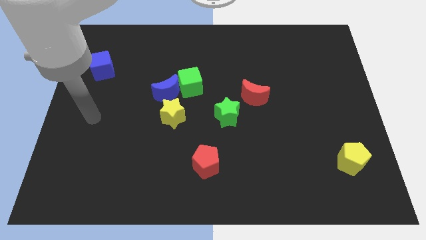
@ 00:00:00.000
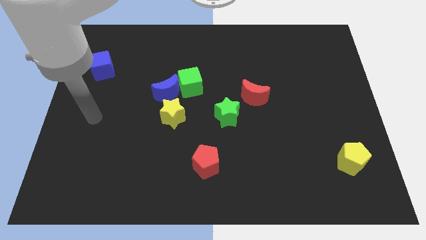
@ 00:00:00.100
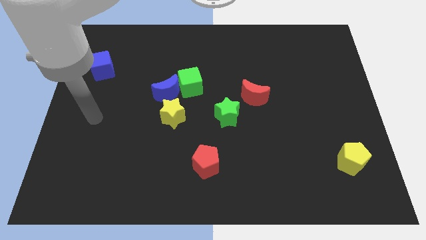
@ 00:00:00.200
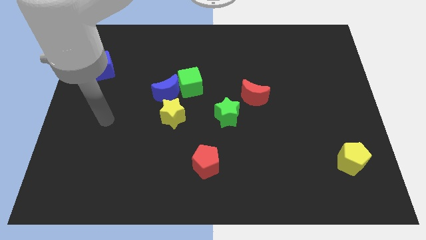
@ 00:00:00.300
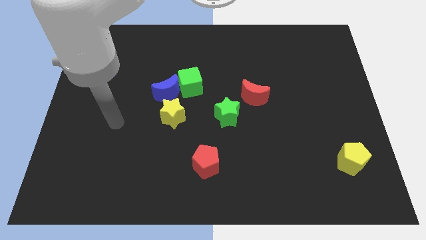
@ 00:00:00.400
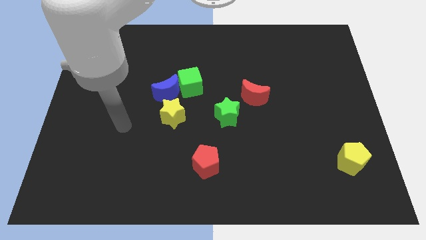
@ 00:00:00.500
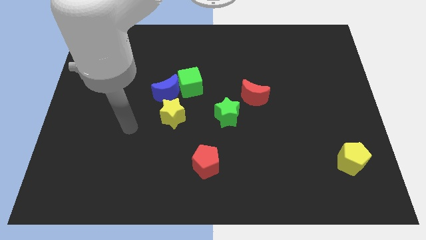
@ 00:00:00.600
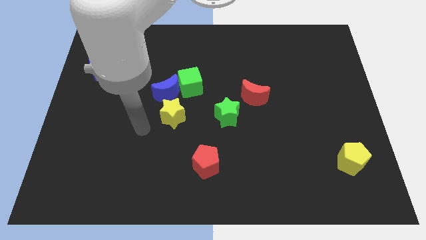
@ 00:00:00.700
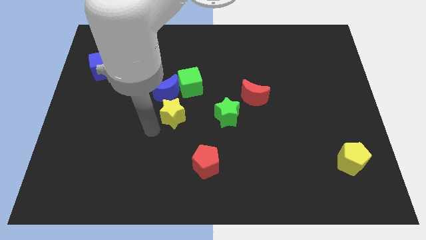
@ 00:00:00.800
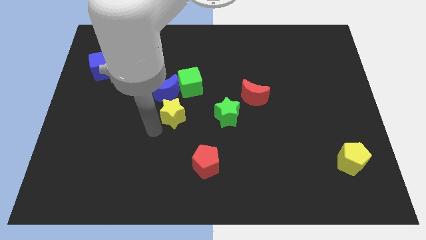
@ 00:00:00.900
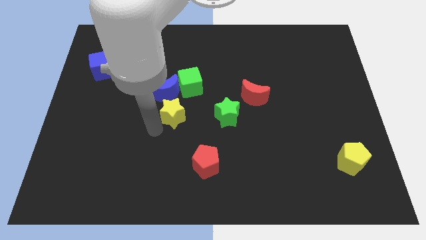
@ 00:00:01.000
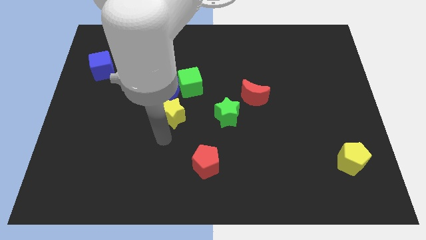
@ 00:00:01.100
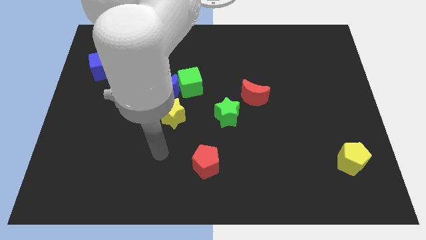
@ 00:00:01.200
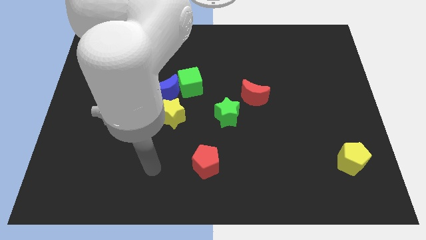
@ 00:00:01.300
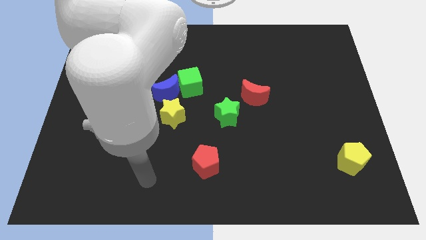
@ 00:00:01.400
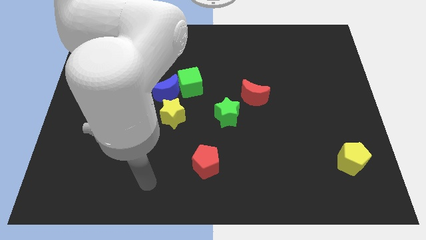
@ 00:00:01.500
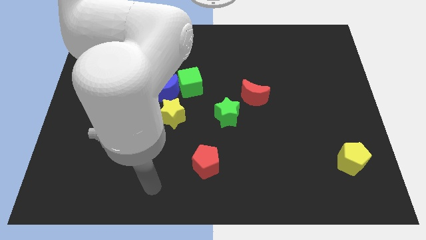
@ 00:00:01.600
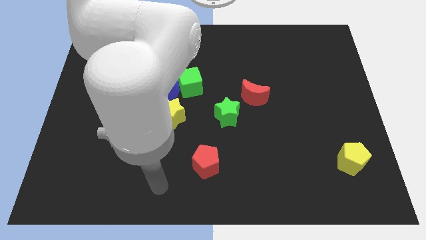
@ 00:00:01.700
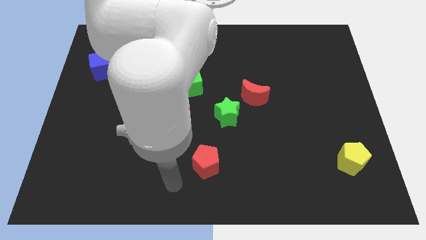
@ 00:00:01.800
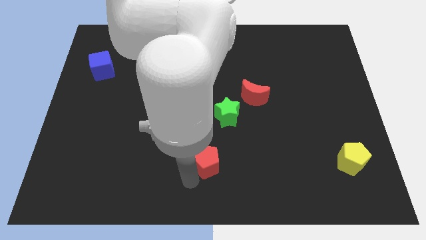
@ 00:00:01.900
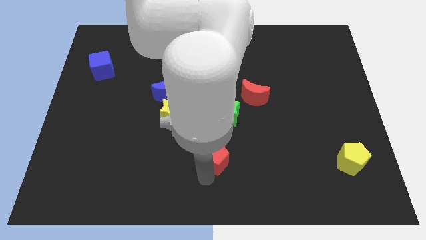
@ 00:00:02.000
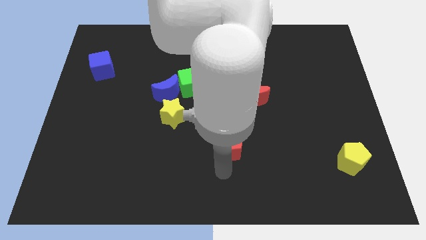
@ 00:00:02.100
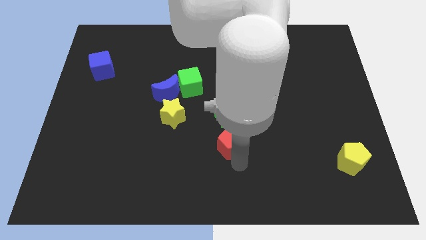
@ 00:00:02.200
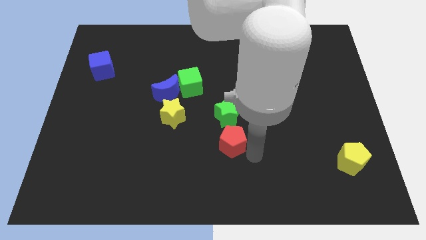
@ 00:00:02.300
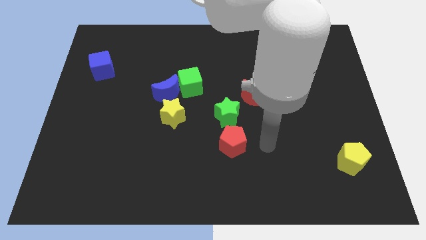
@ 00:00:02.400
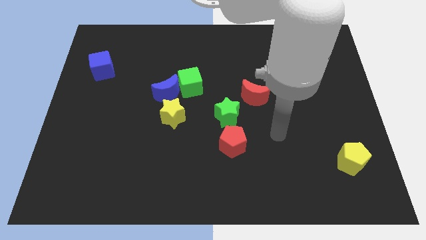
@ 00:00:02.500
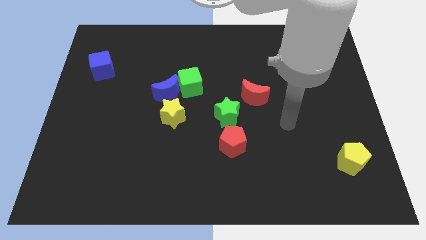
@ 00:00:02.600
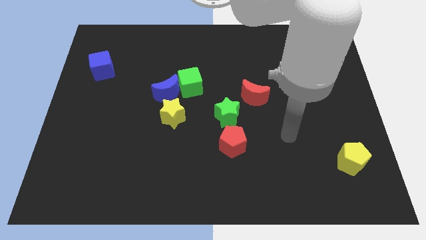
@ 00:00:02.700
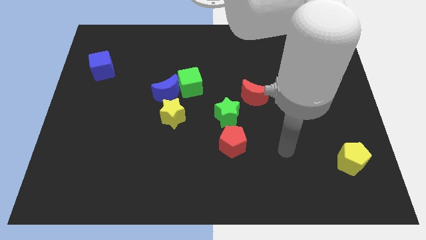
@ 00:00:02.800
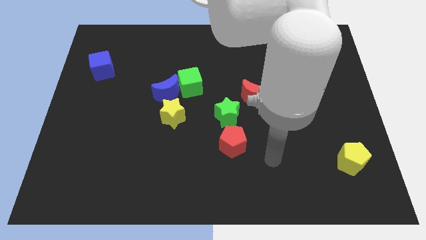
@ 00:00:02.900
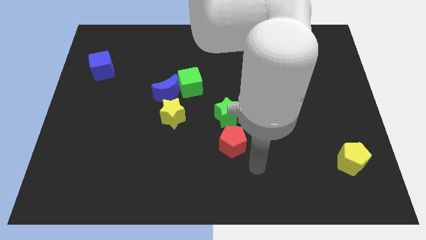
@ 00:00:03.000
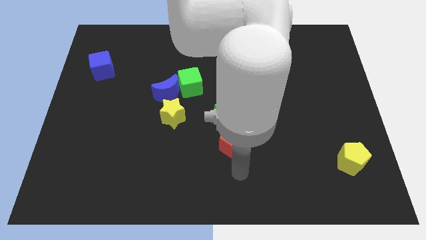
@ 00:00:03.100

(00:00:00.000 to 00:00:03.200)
drag the red pentagon to the bottom of the green star

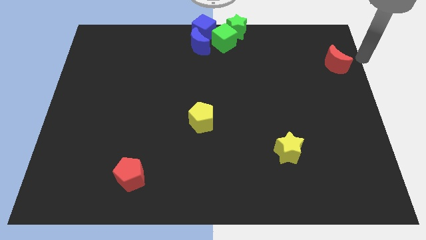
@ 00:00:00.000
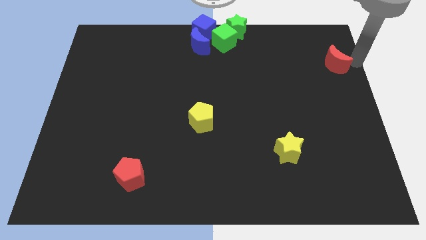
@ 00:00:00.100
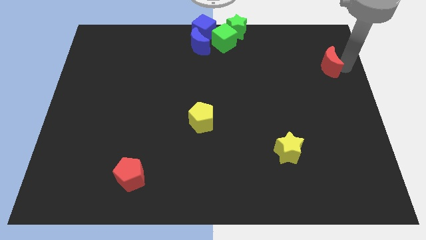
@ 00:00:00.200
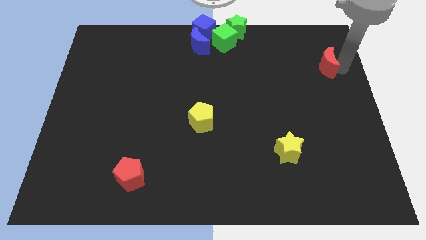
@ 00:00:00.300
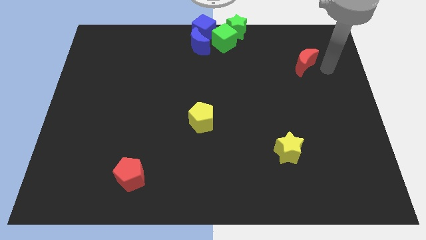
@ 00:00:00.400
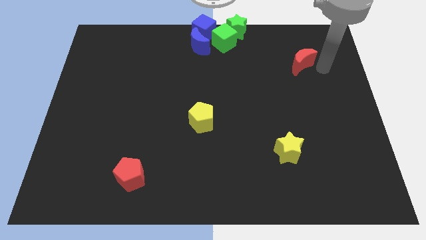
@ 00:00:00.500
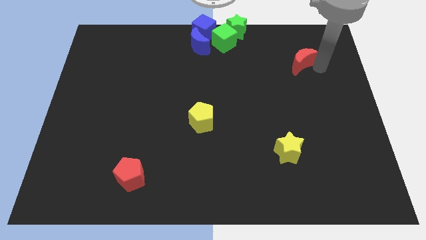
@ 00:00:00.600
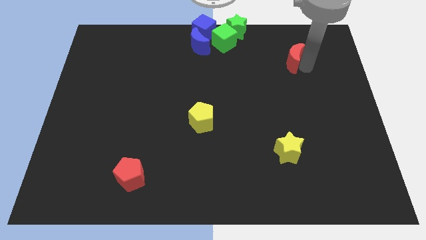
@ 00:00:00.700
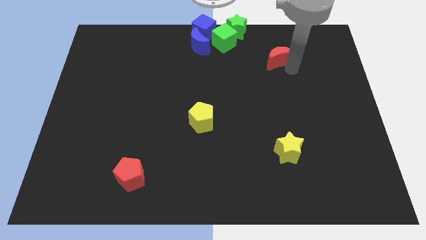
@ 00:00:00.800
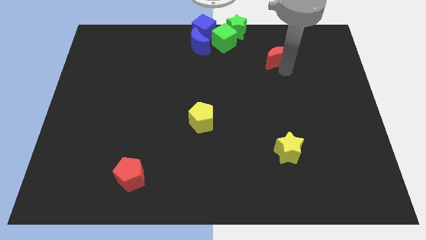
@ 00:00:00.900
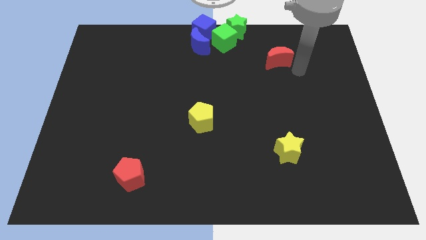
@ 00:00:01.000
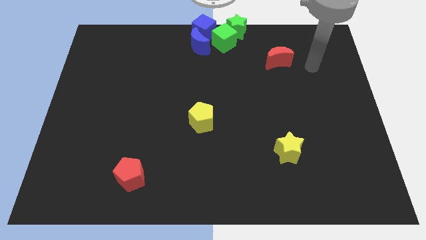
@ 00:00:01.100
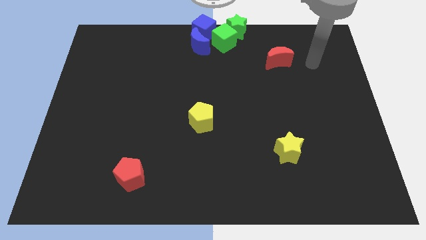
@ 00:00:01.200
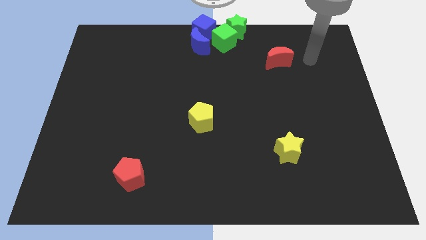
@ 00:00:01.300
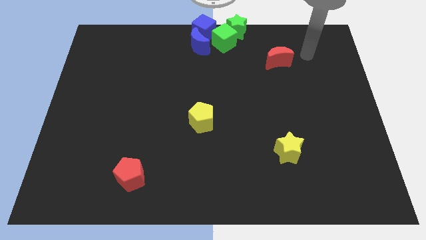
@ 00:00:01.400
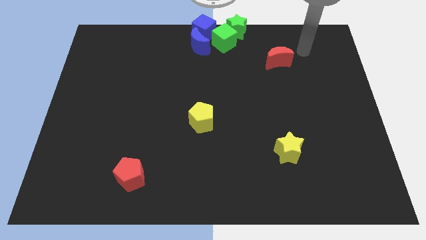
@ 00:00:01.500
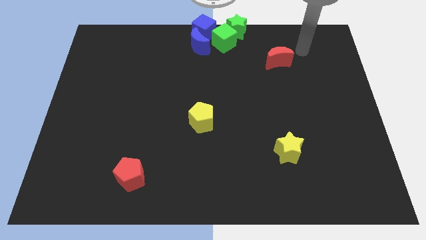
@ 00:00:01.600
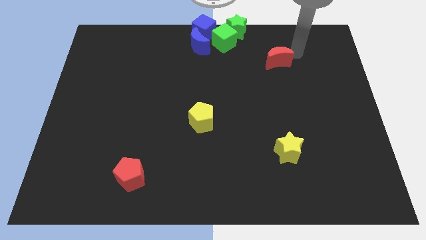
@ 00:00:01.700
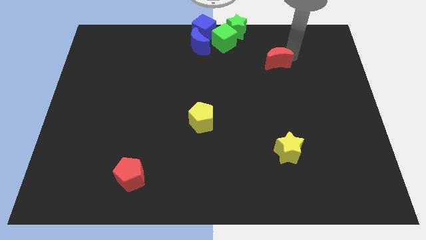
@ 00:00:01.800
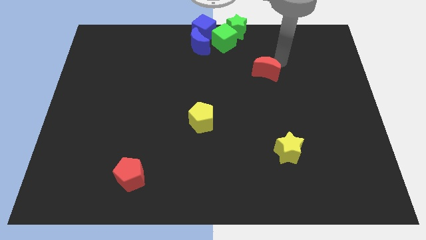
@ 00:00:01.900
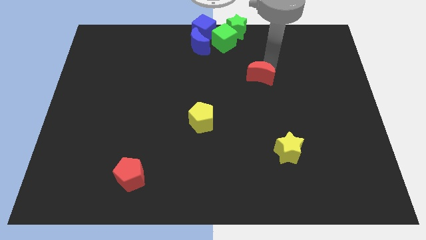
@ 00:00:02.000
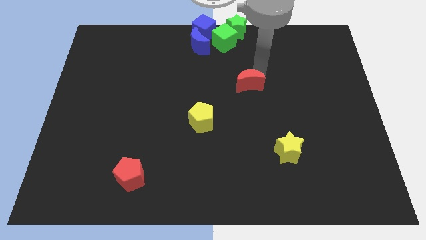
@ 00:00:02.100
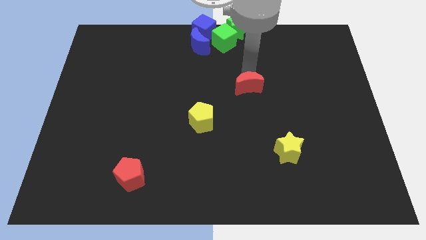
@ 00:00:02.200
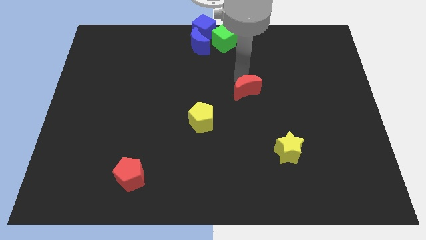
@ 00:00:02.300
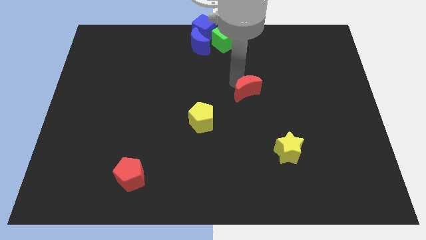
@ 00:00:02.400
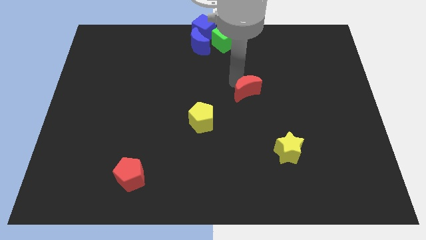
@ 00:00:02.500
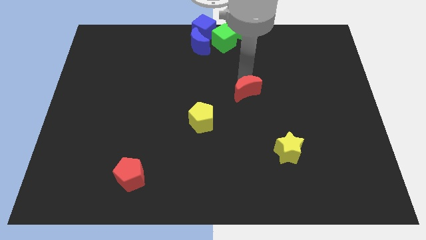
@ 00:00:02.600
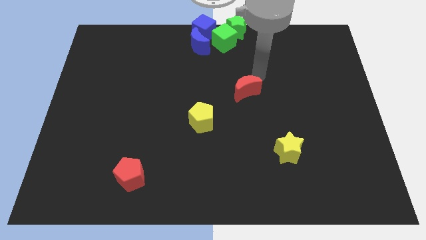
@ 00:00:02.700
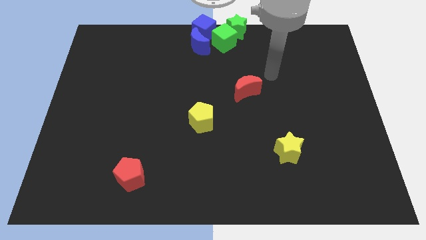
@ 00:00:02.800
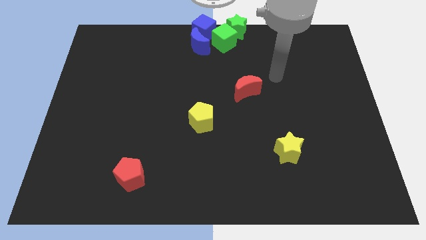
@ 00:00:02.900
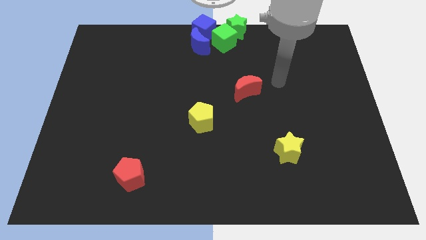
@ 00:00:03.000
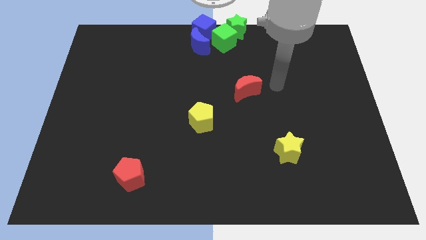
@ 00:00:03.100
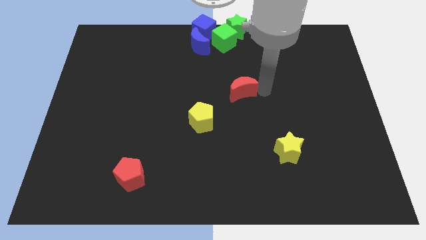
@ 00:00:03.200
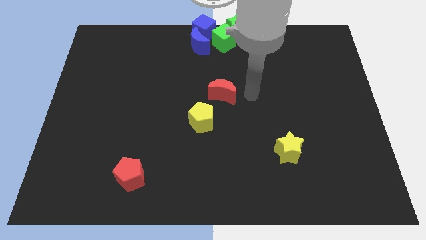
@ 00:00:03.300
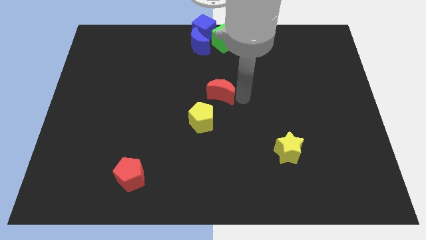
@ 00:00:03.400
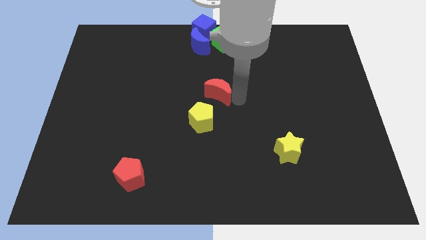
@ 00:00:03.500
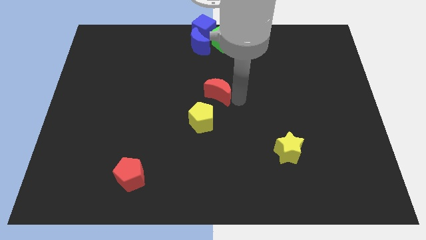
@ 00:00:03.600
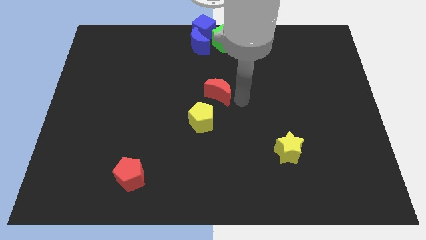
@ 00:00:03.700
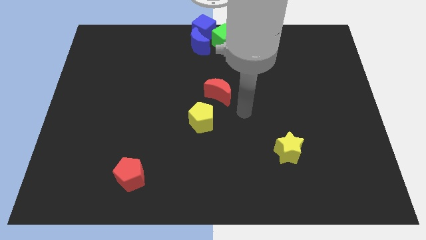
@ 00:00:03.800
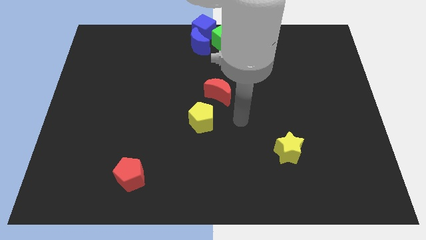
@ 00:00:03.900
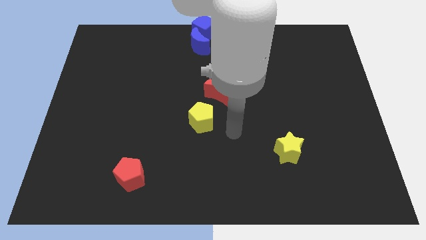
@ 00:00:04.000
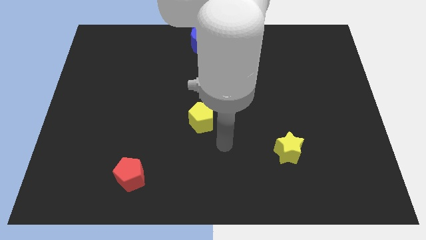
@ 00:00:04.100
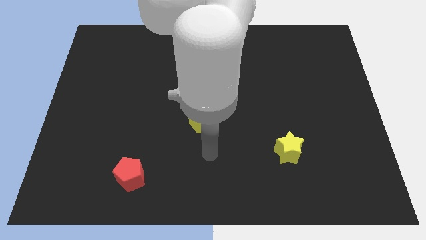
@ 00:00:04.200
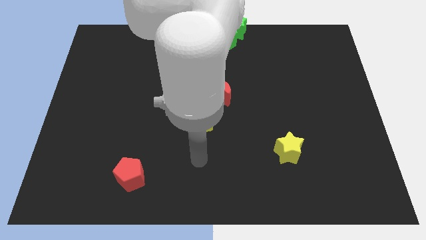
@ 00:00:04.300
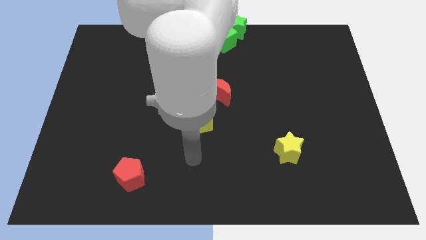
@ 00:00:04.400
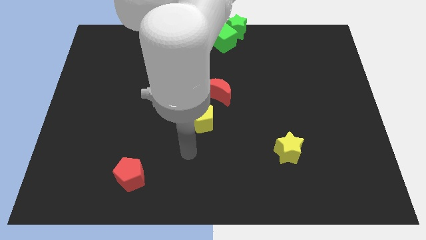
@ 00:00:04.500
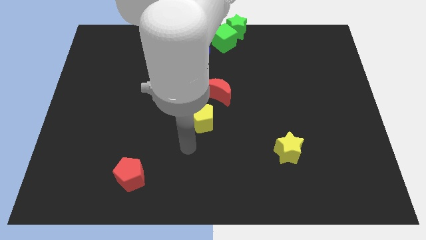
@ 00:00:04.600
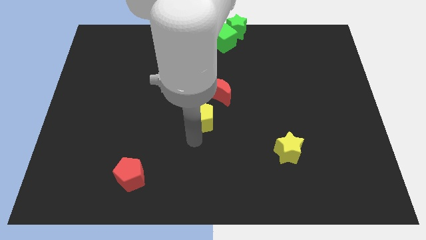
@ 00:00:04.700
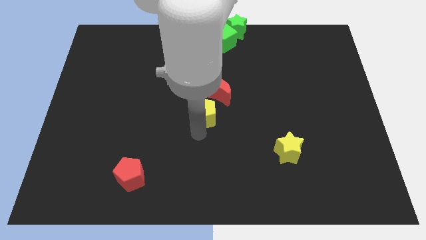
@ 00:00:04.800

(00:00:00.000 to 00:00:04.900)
push the red crescent slightly towards the yellow pentagon on the center of the board

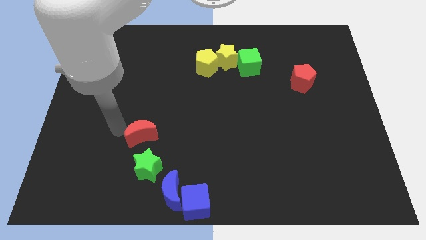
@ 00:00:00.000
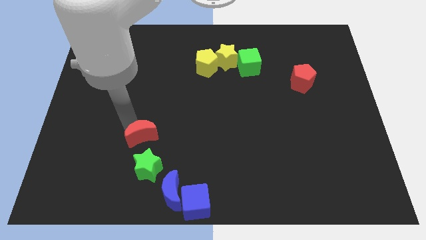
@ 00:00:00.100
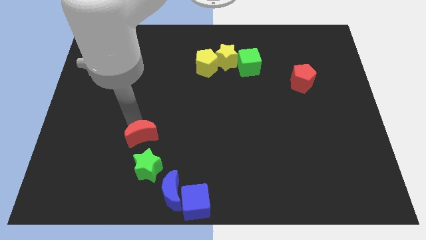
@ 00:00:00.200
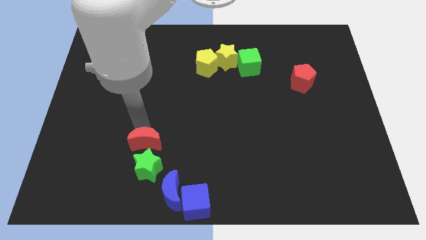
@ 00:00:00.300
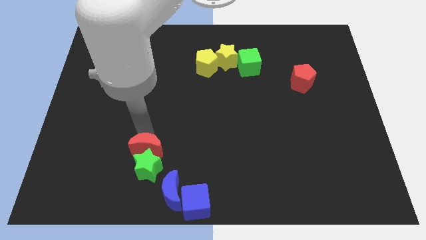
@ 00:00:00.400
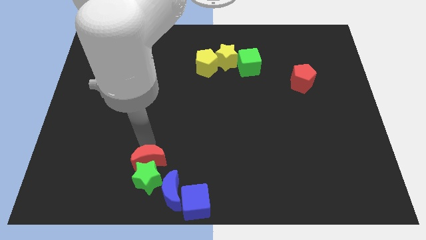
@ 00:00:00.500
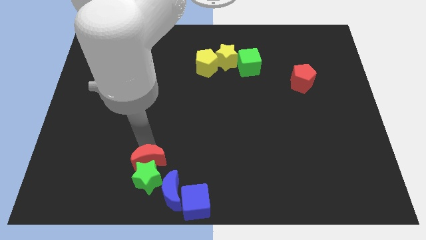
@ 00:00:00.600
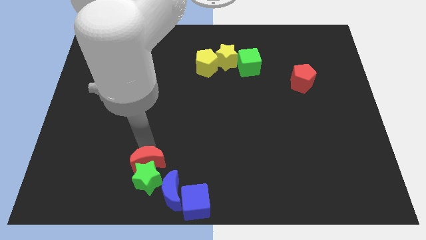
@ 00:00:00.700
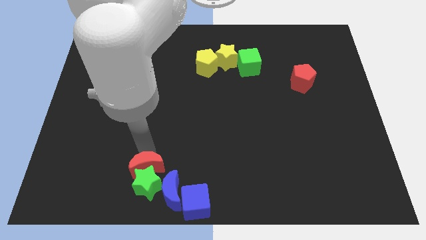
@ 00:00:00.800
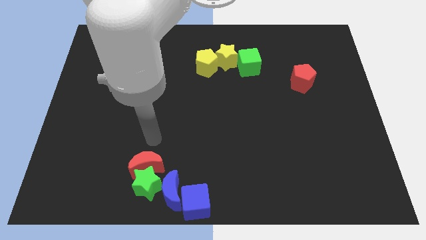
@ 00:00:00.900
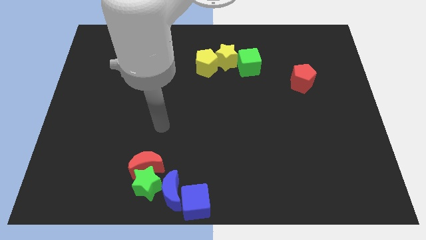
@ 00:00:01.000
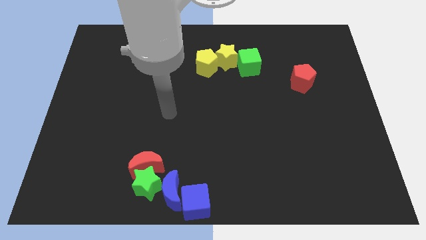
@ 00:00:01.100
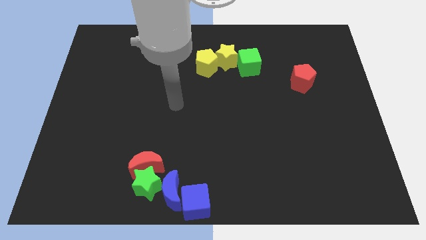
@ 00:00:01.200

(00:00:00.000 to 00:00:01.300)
move the red crescent at the top of the green star
